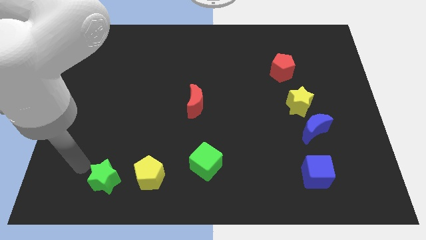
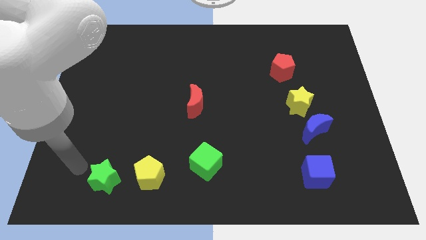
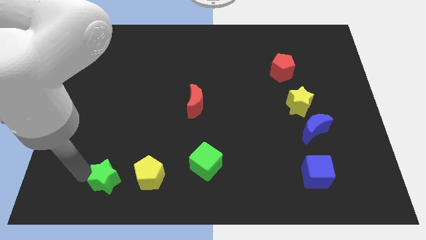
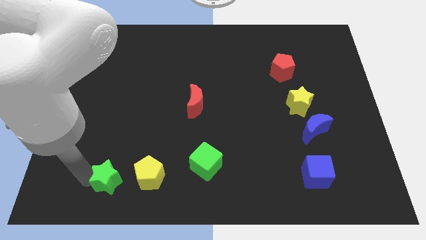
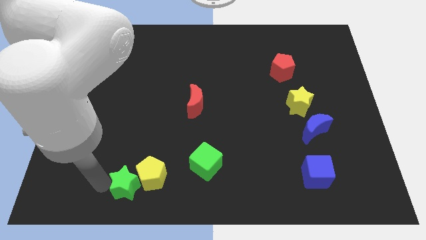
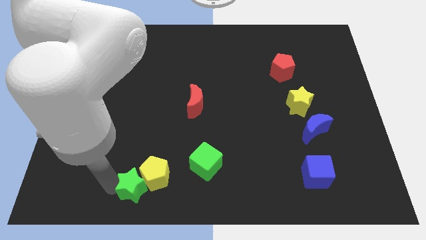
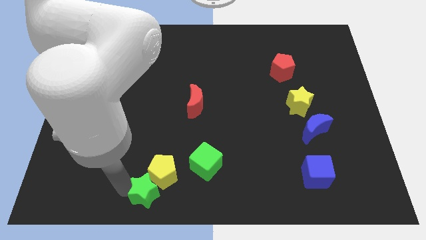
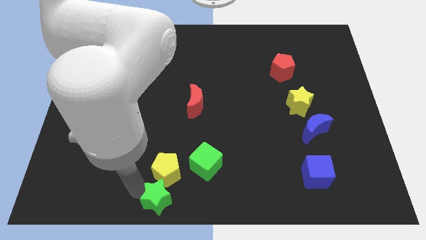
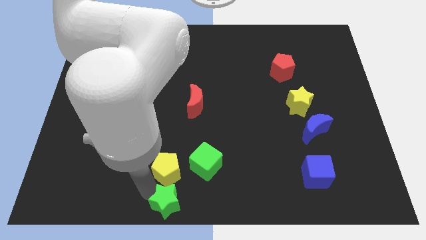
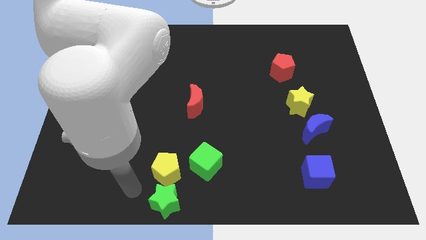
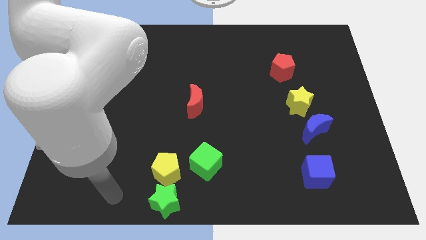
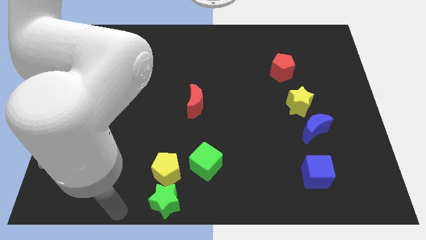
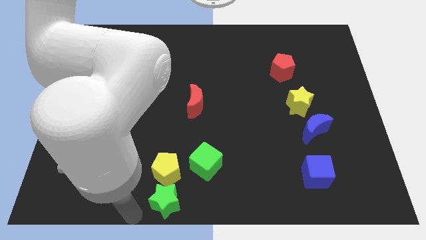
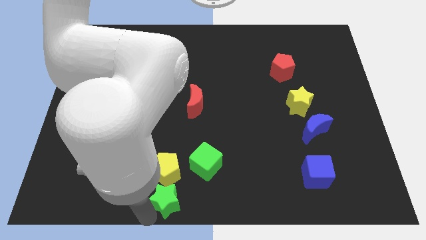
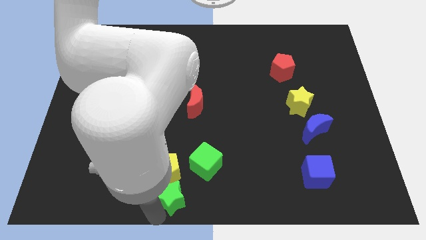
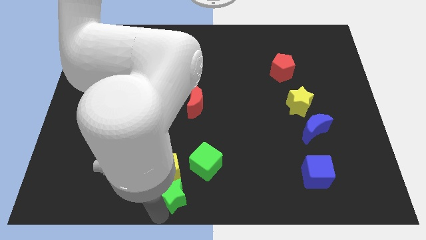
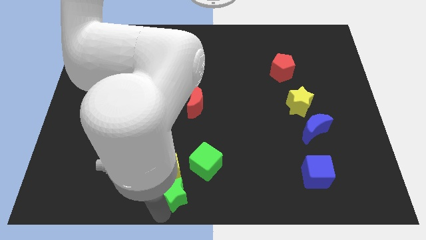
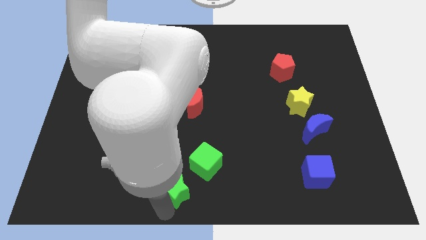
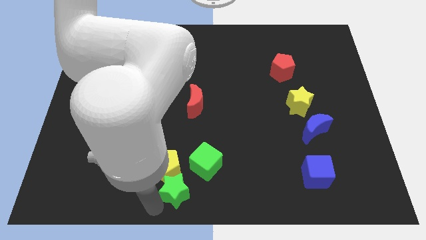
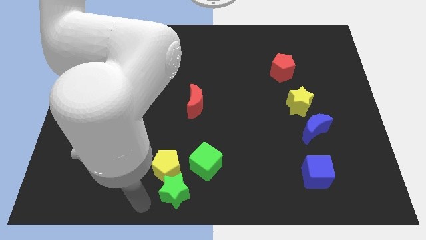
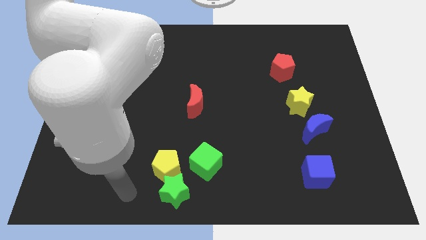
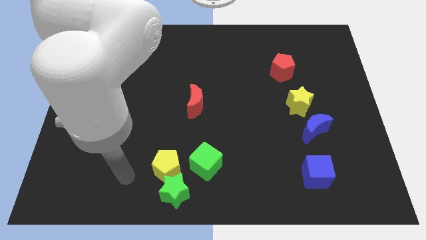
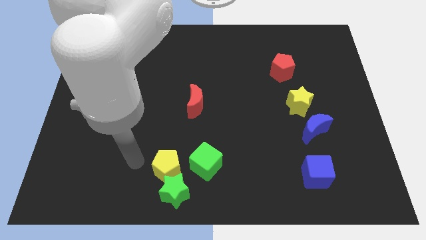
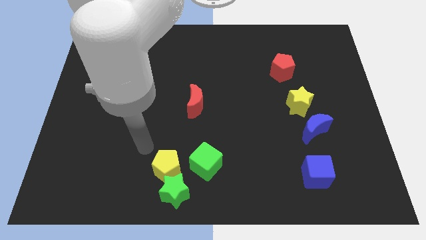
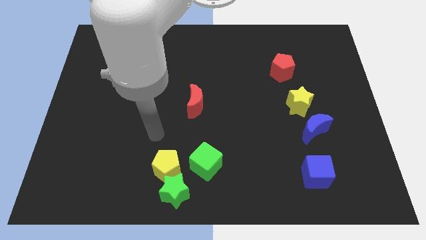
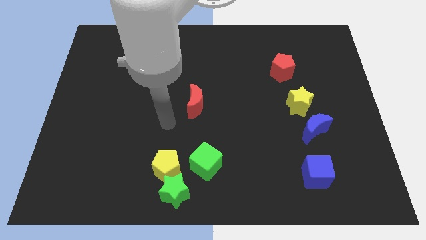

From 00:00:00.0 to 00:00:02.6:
move the green star diagonally to the bottom left of the green cube

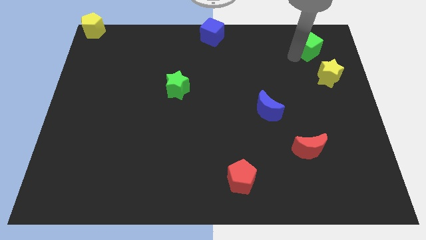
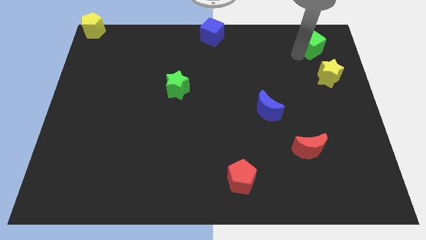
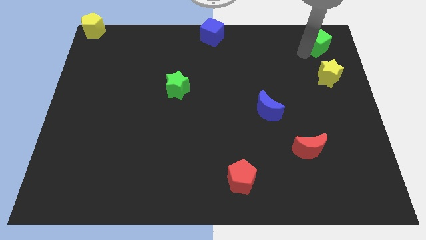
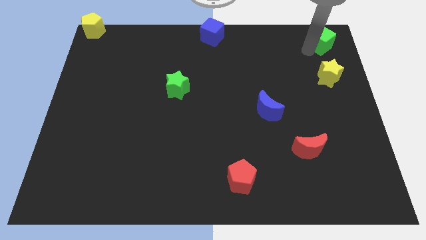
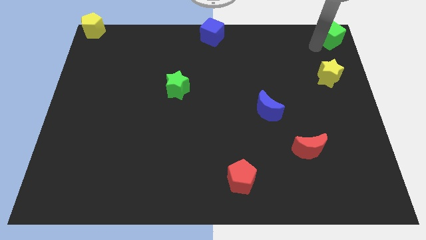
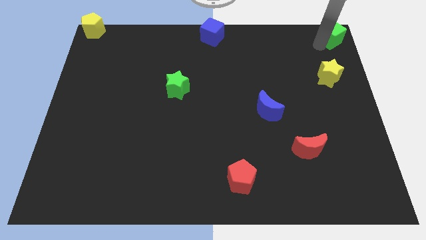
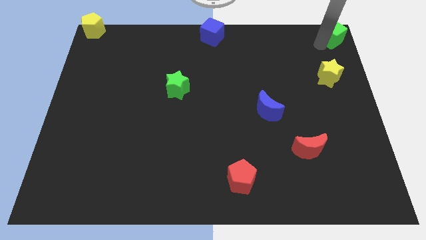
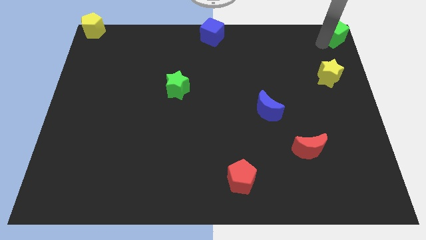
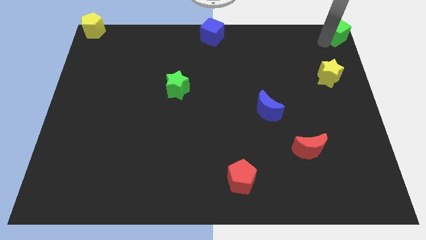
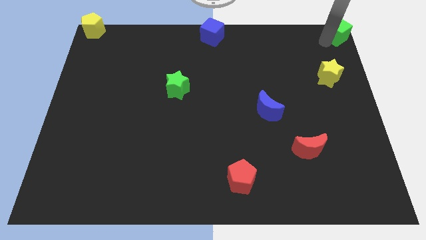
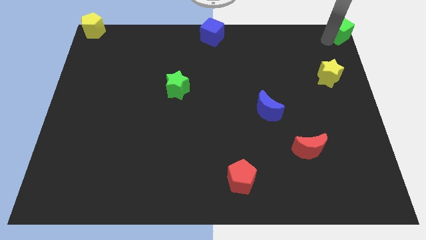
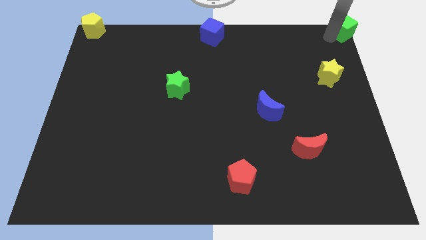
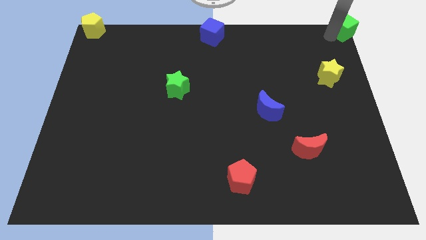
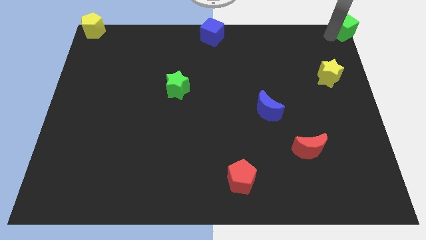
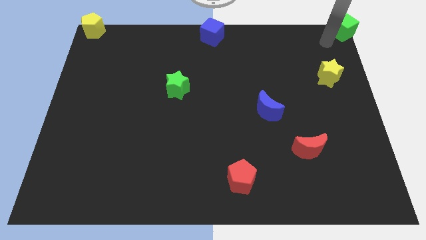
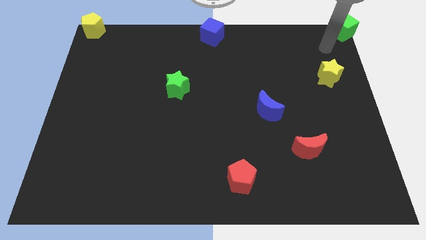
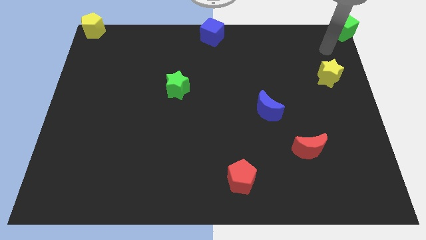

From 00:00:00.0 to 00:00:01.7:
place the green cube at the top right corner of the board

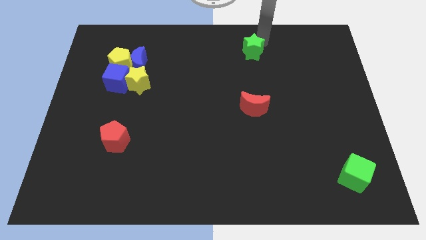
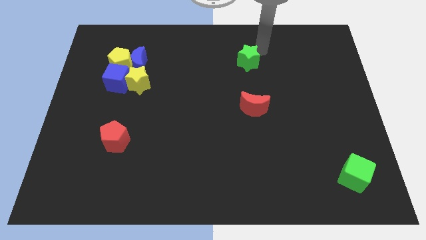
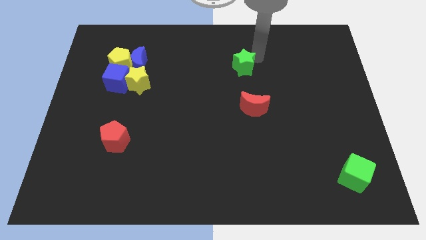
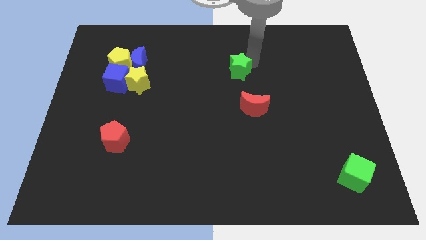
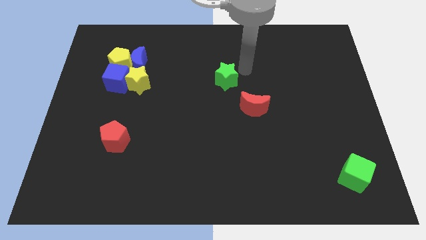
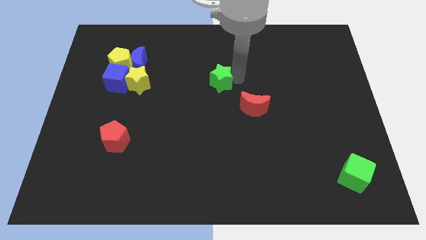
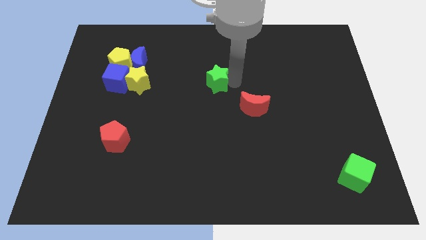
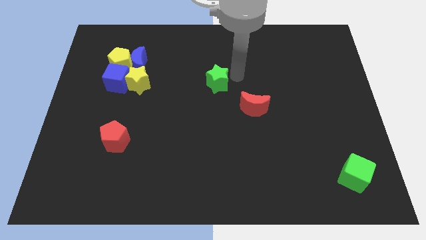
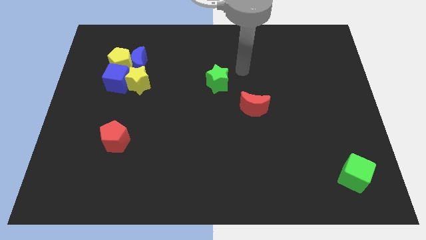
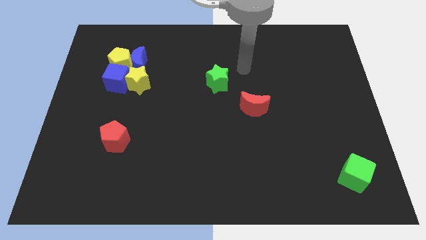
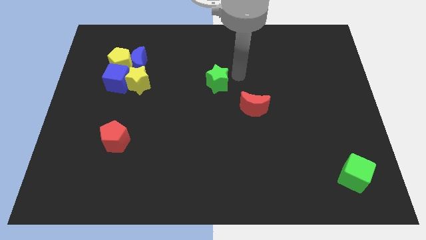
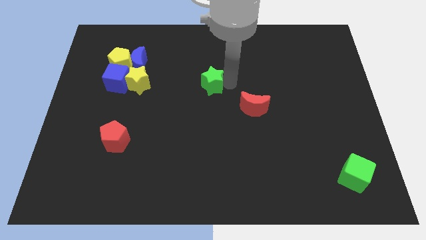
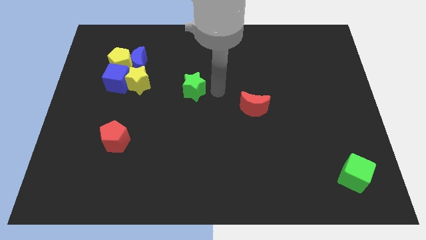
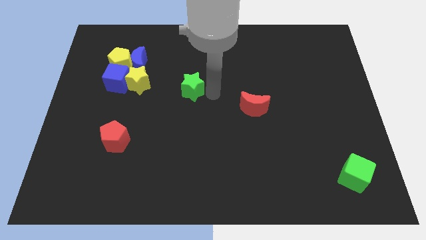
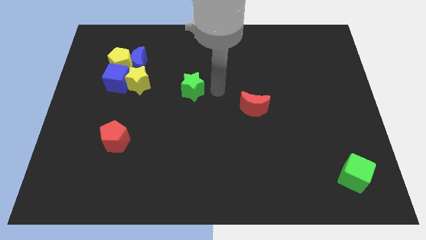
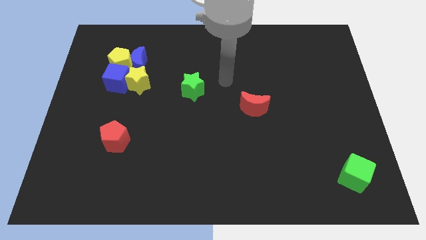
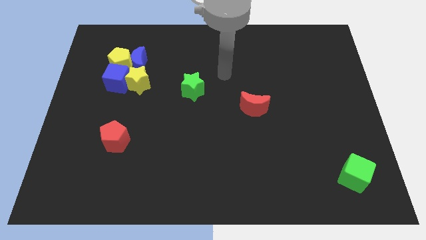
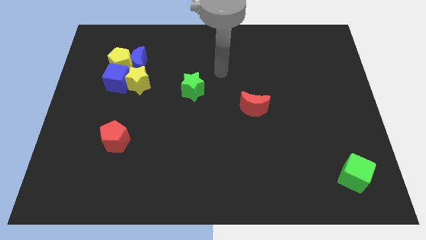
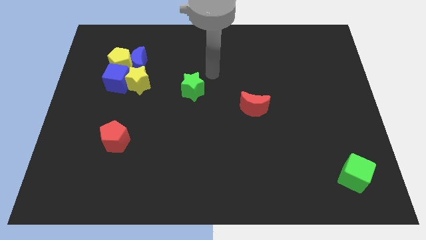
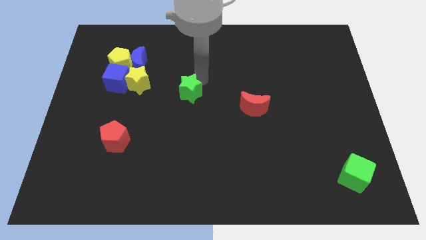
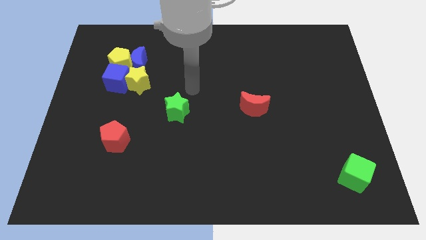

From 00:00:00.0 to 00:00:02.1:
place green star diagonal to left of red moon

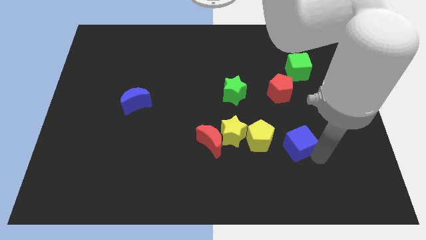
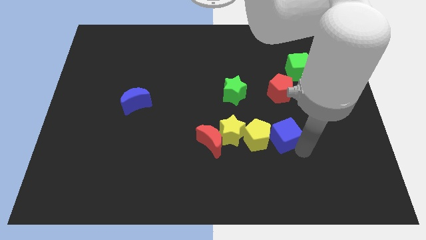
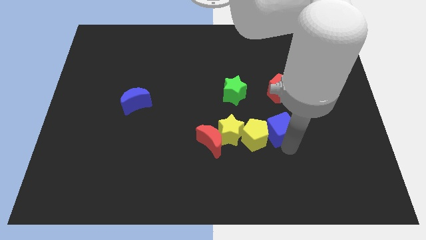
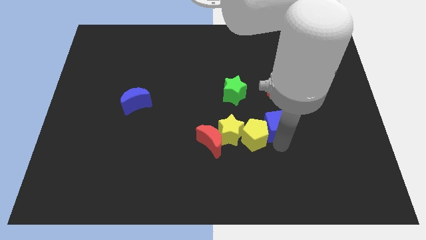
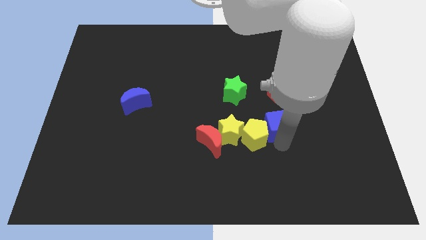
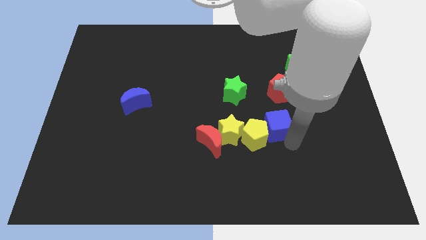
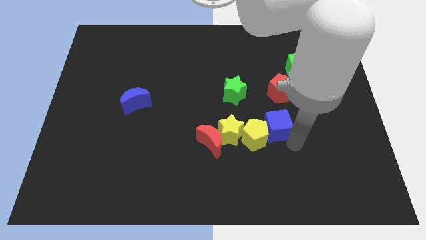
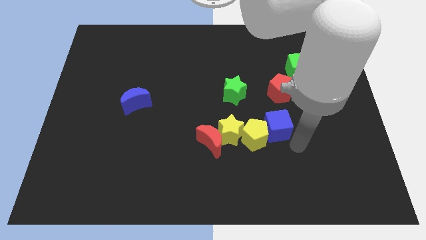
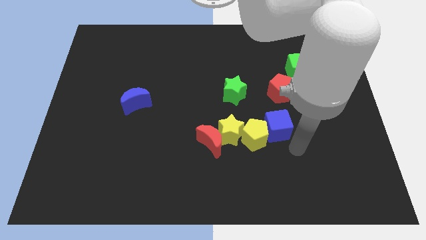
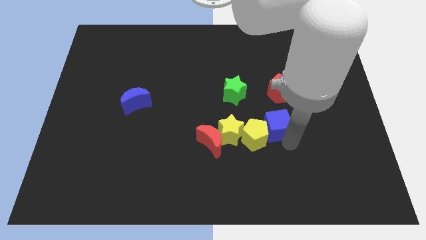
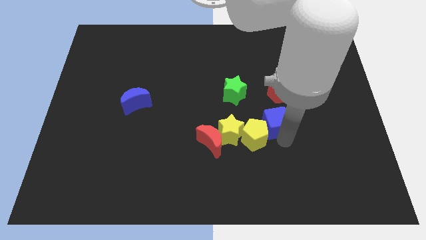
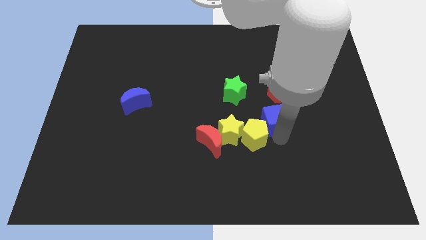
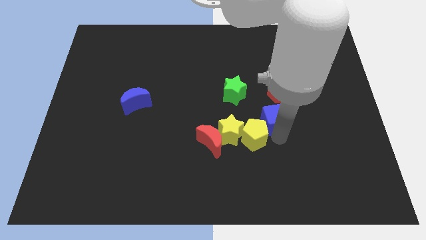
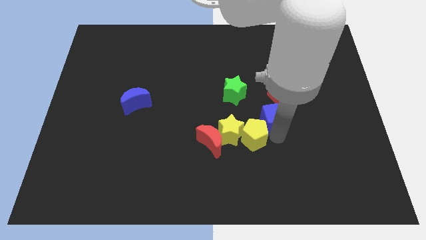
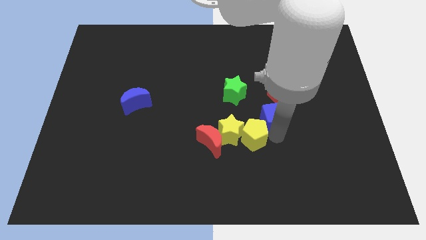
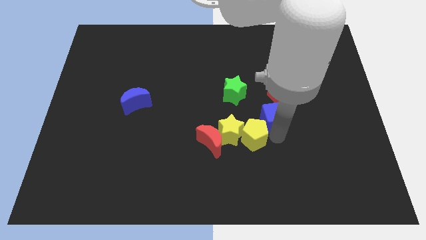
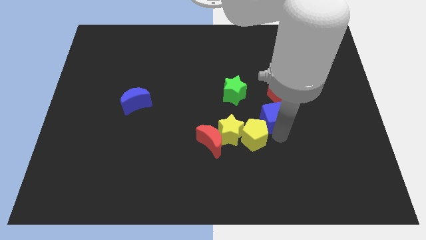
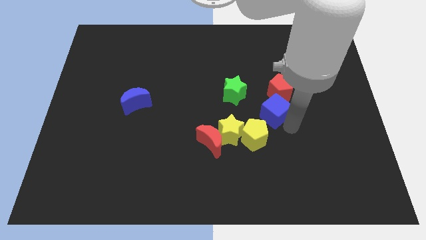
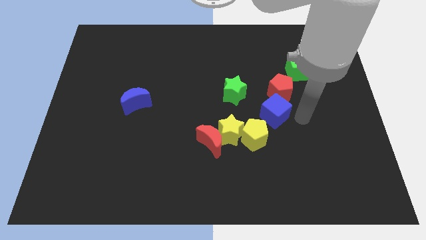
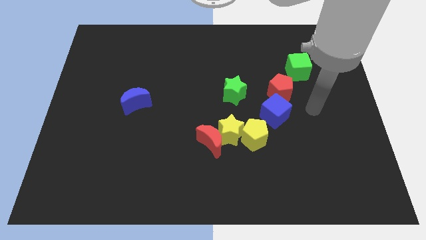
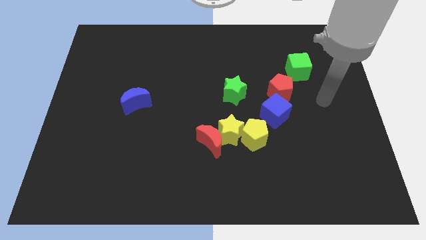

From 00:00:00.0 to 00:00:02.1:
place the blue cube in between the red pentagon and yellow pentagon

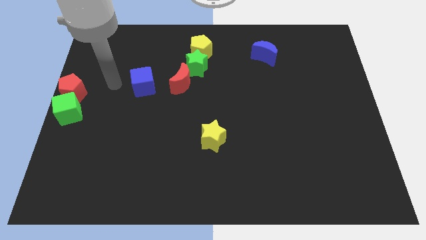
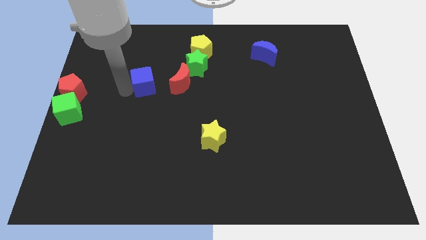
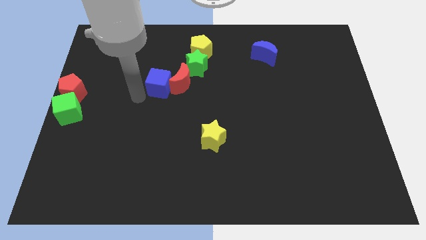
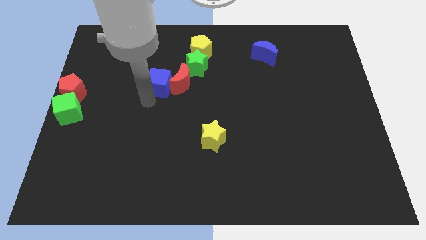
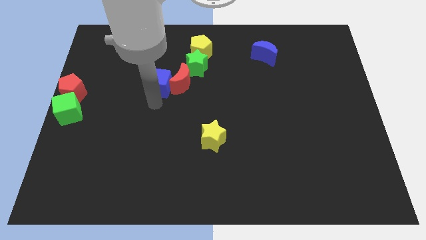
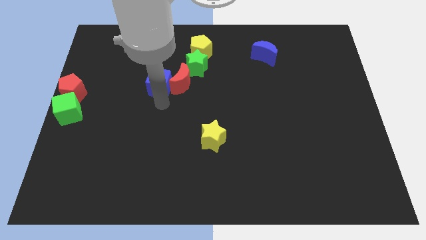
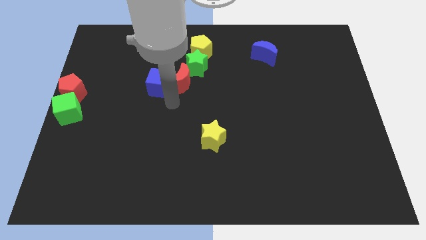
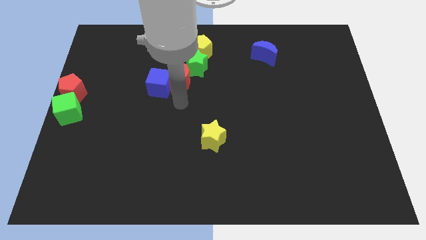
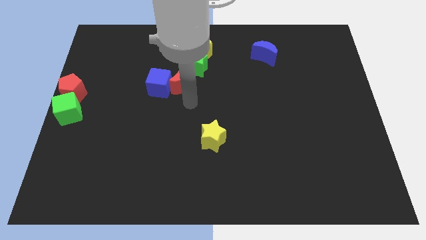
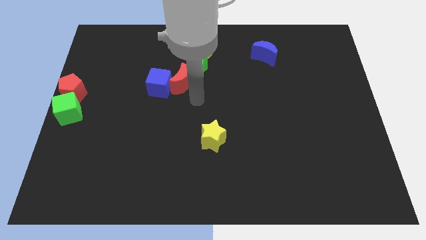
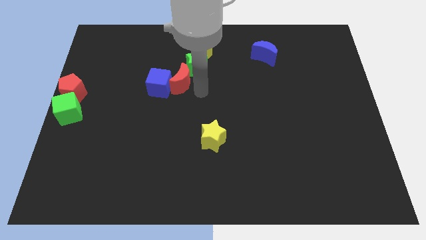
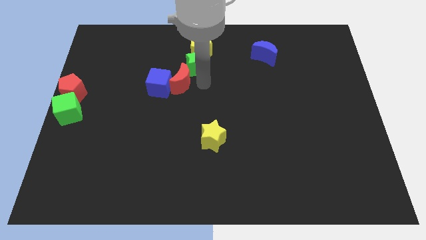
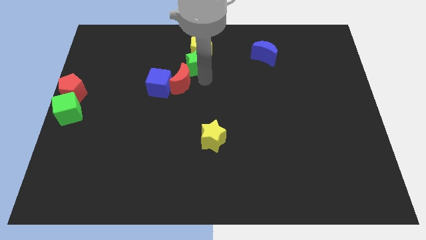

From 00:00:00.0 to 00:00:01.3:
push the green cube into the red moon
